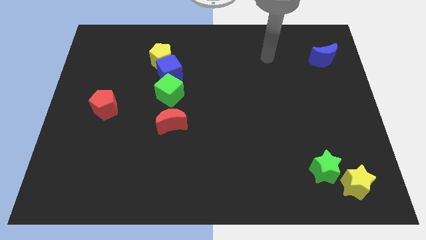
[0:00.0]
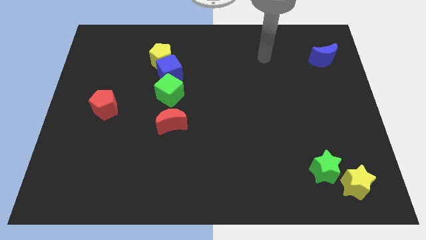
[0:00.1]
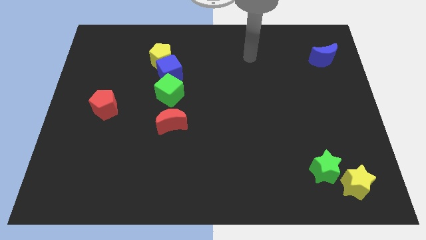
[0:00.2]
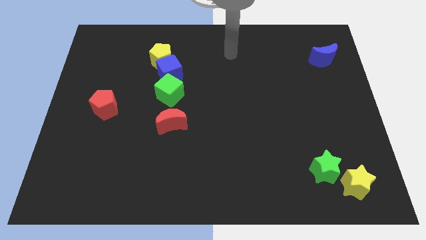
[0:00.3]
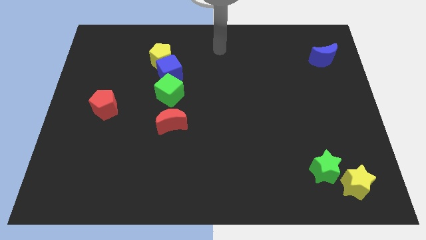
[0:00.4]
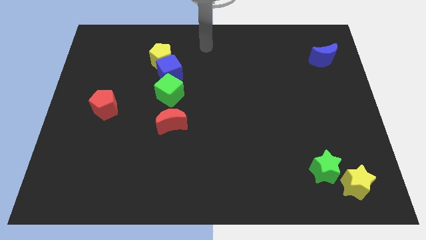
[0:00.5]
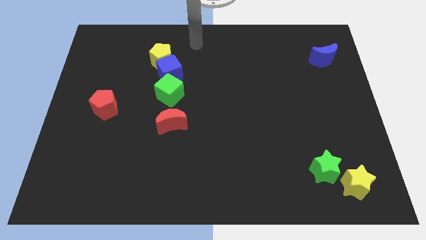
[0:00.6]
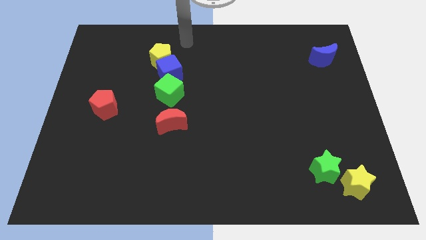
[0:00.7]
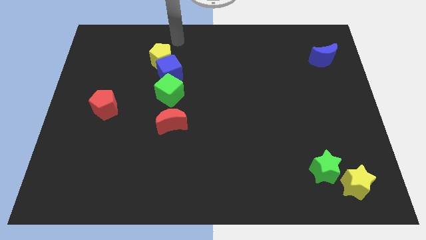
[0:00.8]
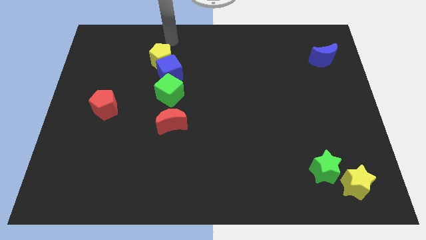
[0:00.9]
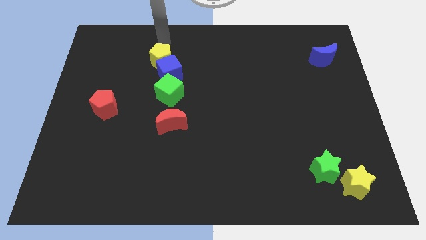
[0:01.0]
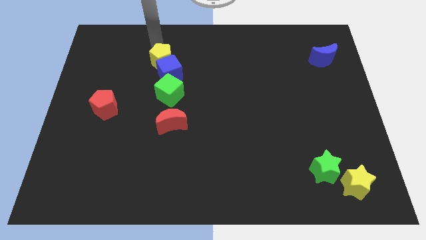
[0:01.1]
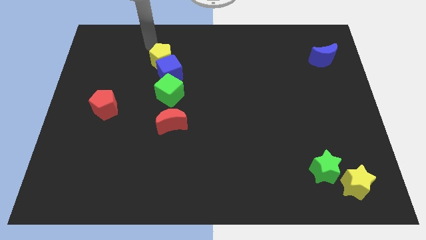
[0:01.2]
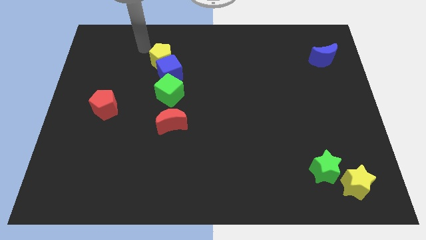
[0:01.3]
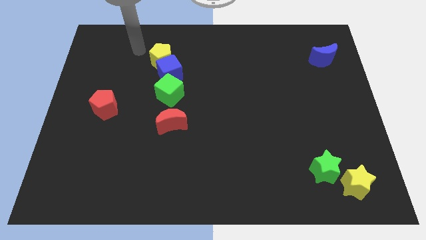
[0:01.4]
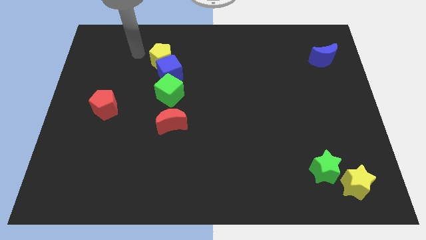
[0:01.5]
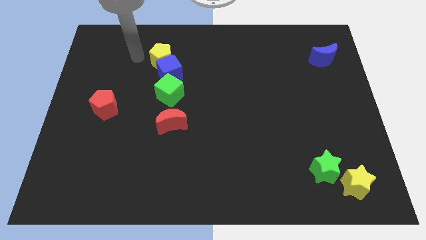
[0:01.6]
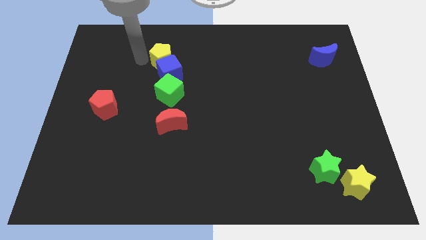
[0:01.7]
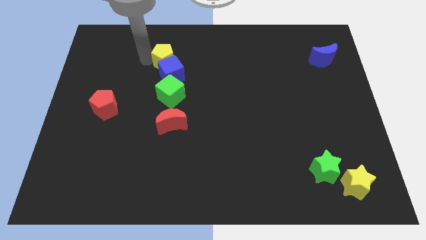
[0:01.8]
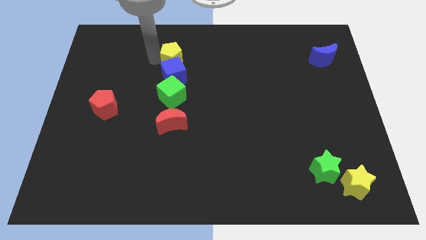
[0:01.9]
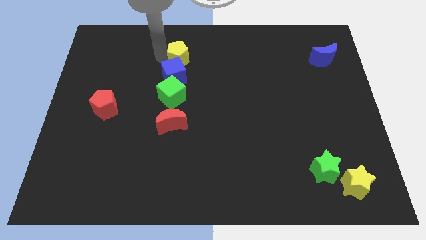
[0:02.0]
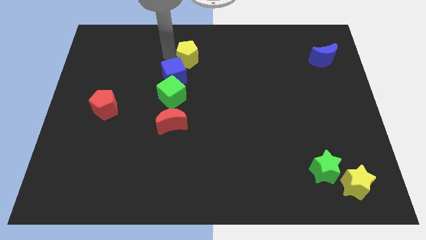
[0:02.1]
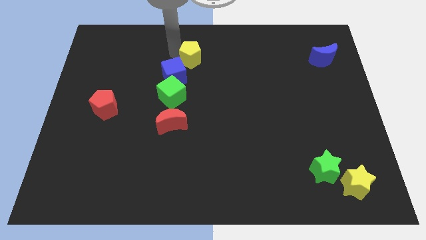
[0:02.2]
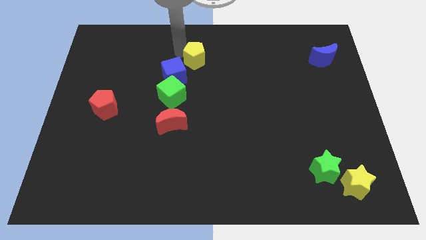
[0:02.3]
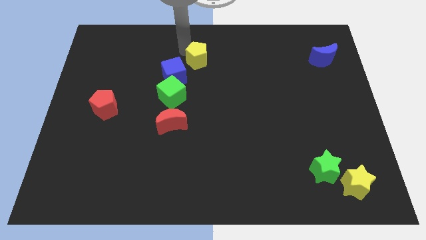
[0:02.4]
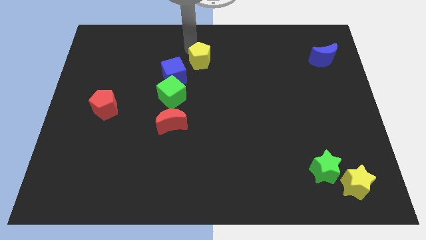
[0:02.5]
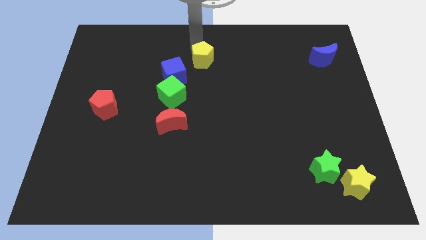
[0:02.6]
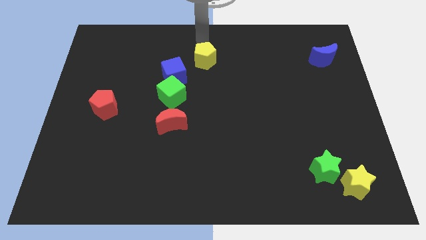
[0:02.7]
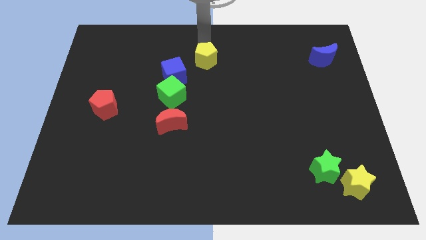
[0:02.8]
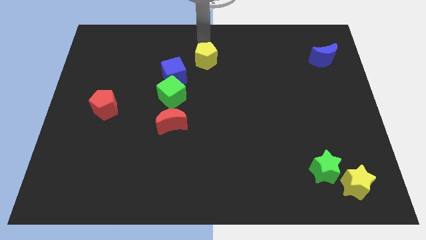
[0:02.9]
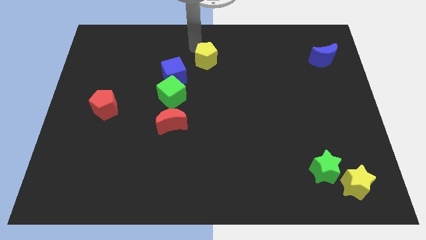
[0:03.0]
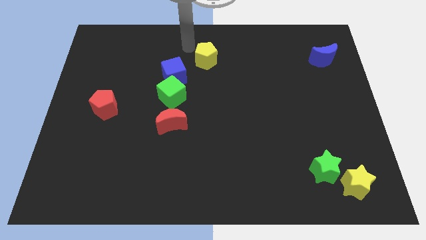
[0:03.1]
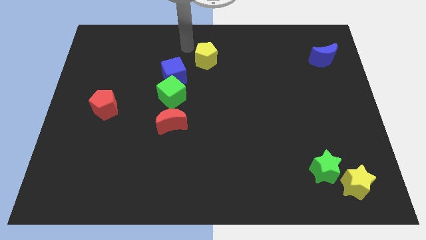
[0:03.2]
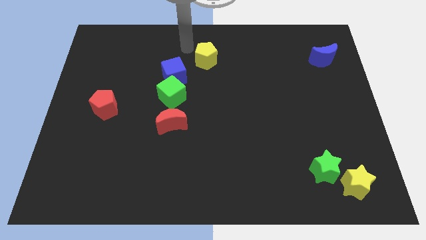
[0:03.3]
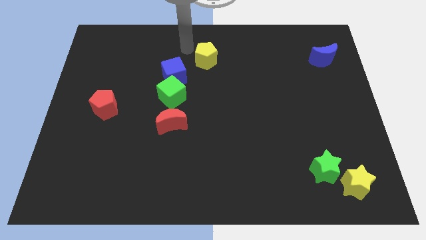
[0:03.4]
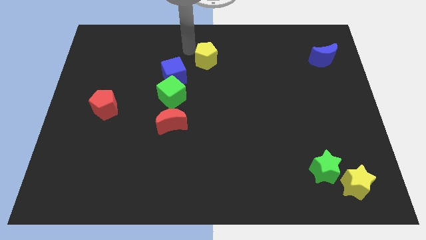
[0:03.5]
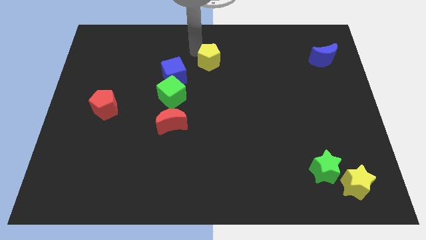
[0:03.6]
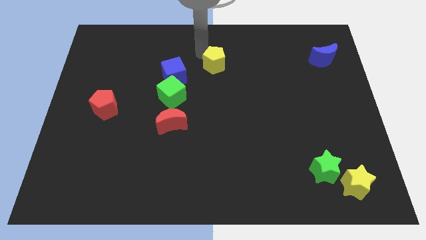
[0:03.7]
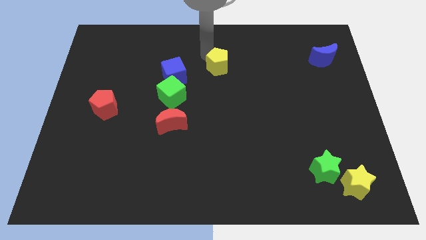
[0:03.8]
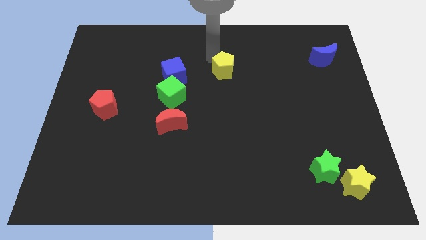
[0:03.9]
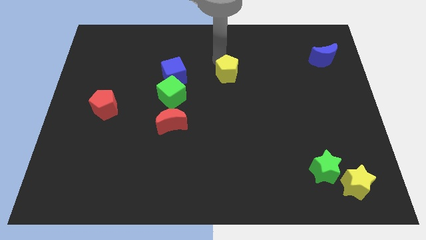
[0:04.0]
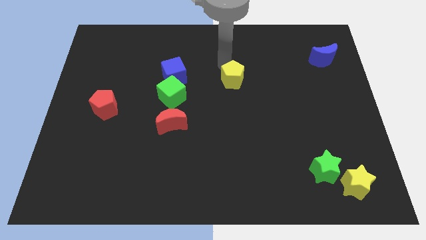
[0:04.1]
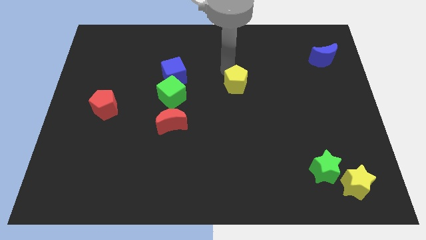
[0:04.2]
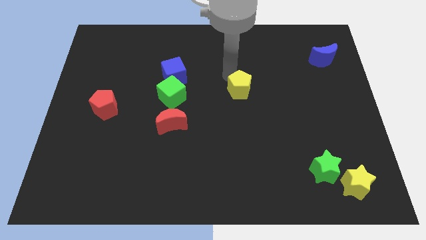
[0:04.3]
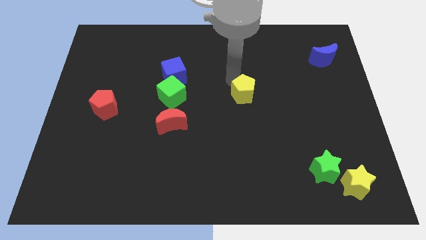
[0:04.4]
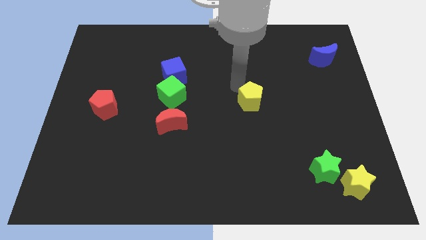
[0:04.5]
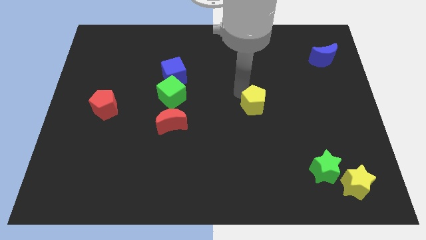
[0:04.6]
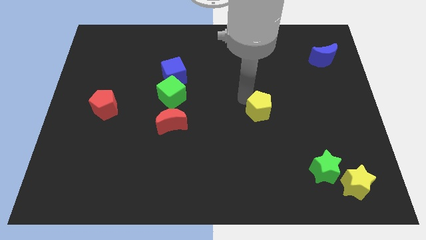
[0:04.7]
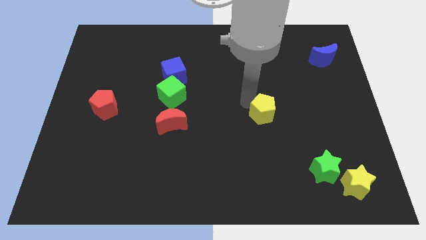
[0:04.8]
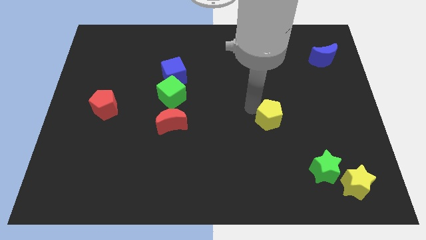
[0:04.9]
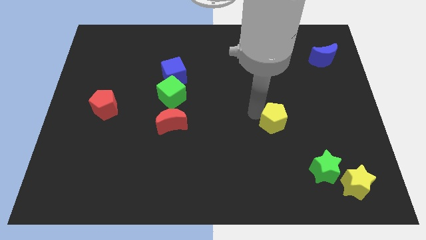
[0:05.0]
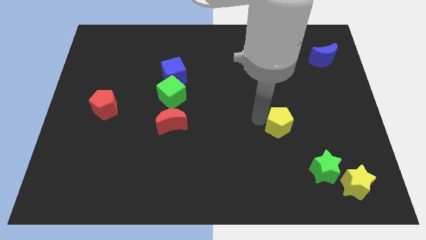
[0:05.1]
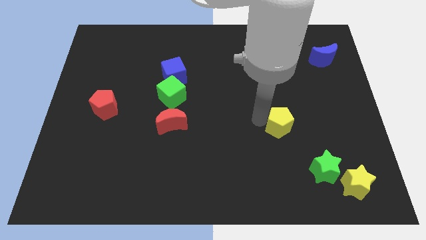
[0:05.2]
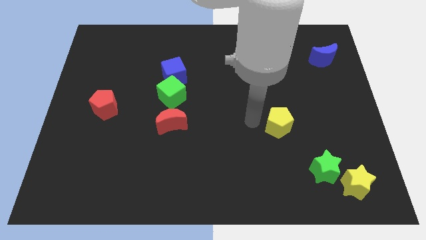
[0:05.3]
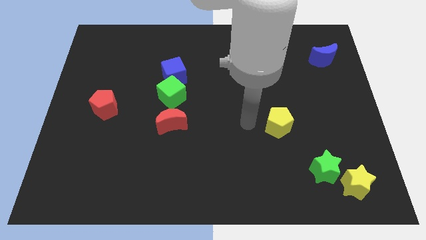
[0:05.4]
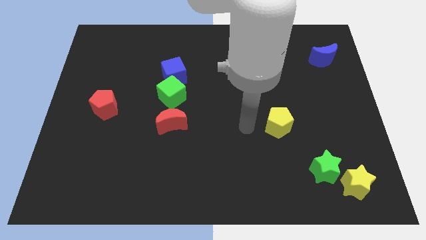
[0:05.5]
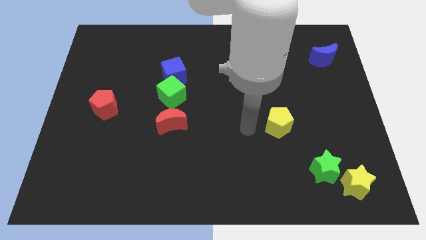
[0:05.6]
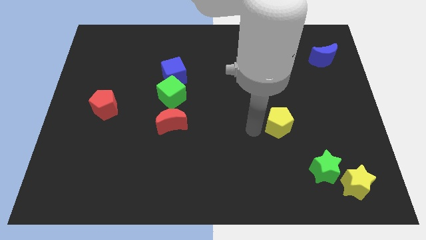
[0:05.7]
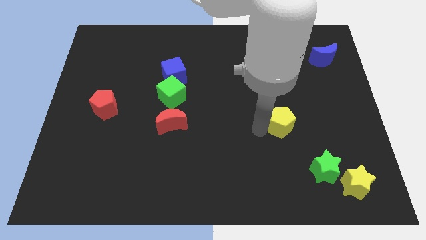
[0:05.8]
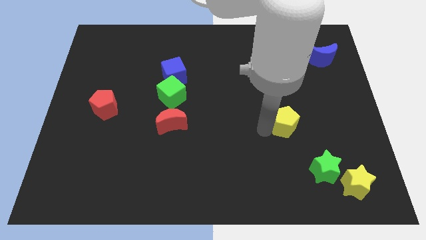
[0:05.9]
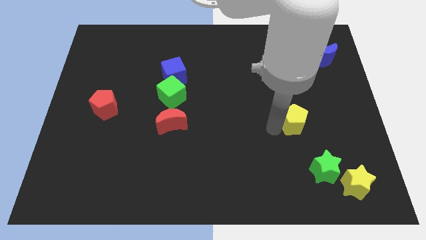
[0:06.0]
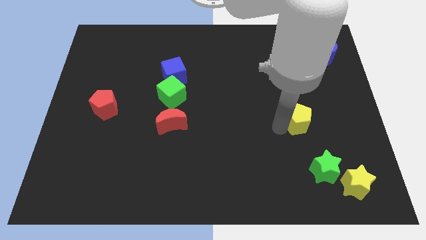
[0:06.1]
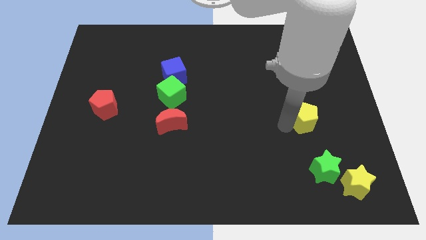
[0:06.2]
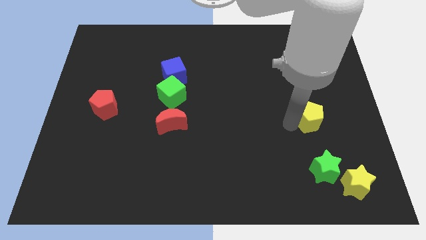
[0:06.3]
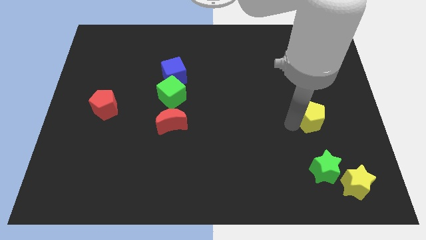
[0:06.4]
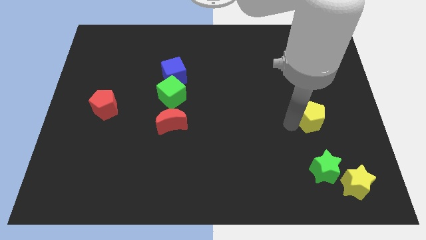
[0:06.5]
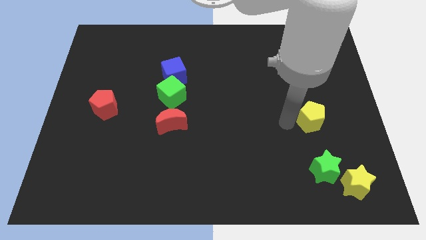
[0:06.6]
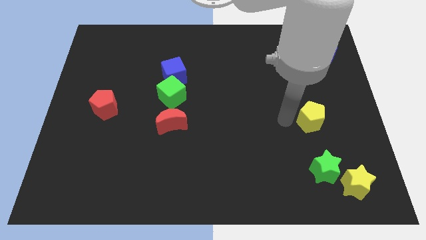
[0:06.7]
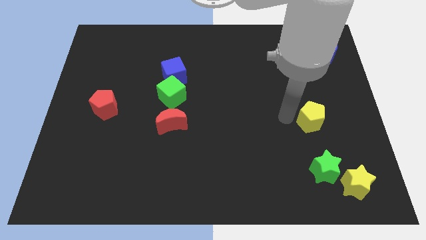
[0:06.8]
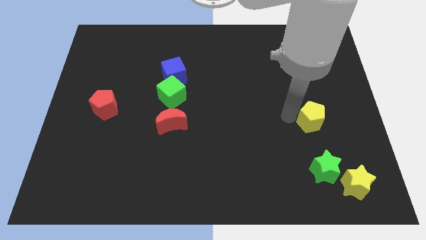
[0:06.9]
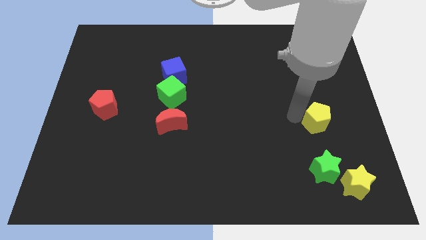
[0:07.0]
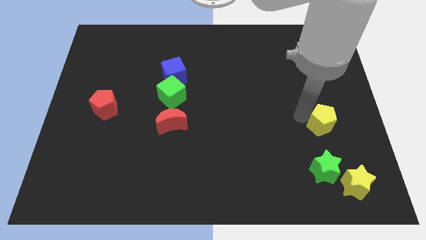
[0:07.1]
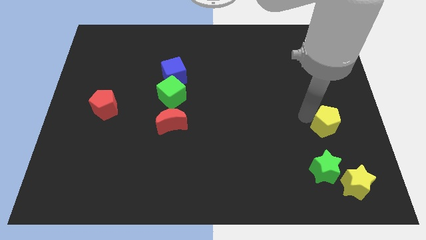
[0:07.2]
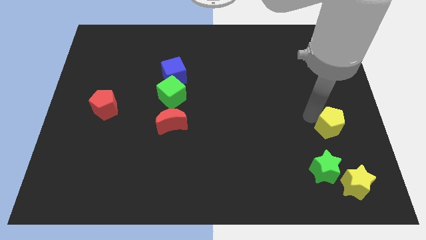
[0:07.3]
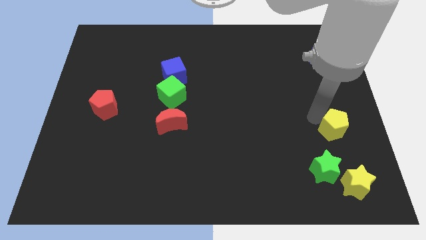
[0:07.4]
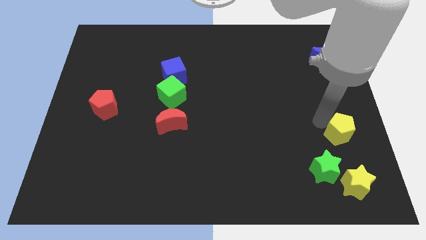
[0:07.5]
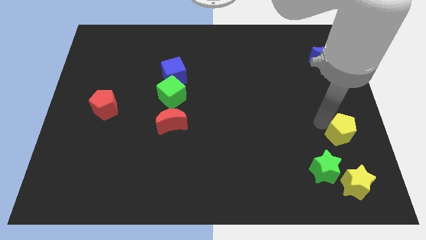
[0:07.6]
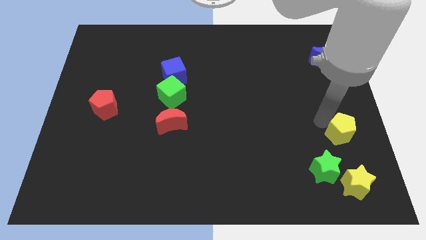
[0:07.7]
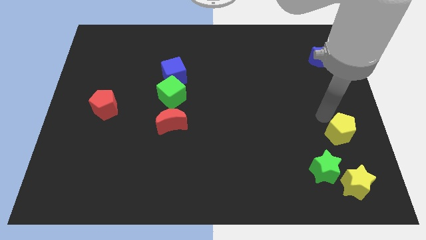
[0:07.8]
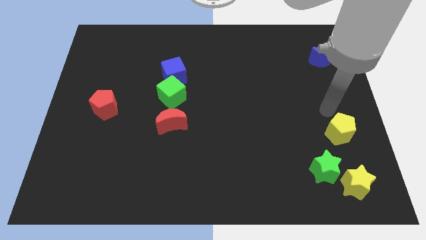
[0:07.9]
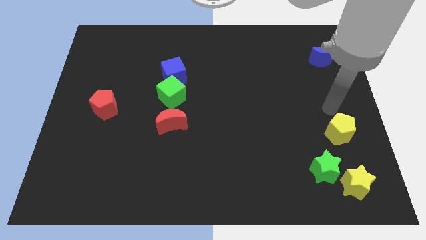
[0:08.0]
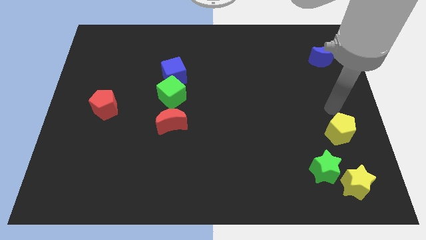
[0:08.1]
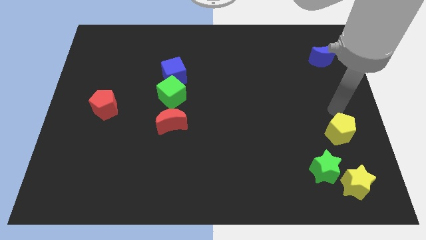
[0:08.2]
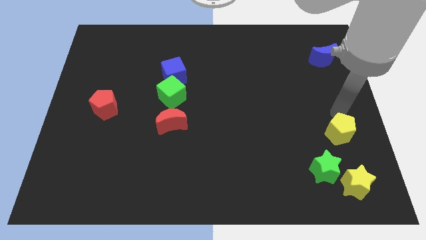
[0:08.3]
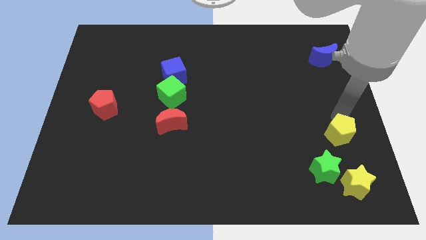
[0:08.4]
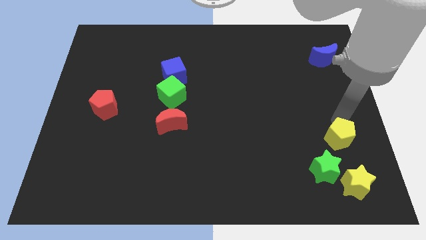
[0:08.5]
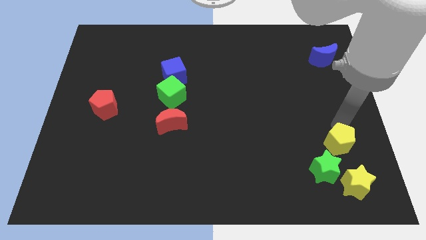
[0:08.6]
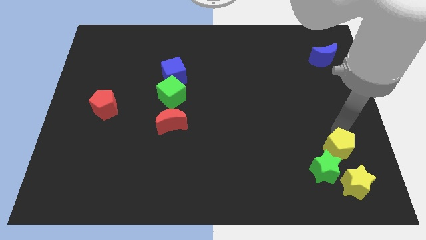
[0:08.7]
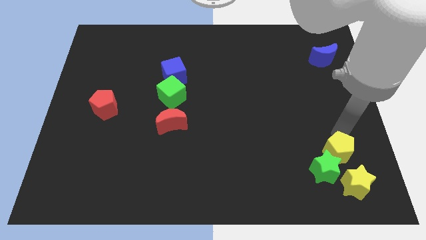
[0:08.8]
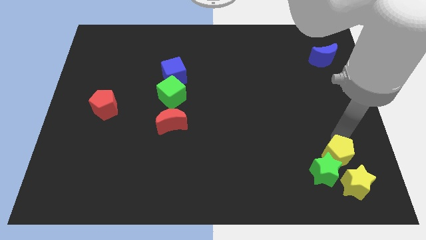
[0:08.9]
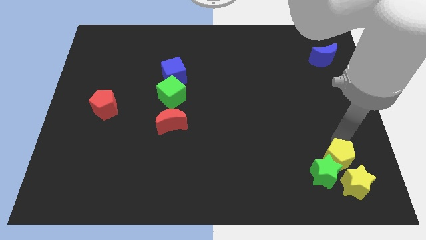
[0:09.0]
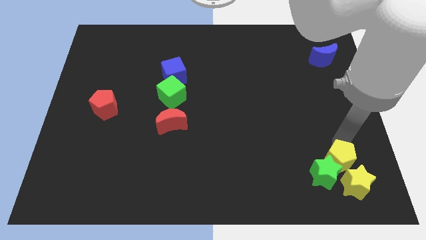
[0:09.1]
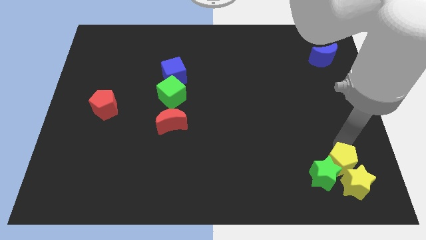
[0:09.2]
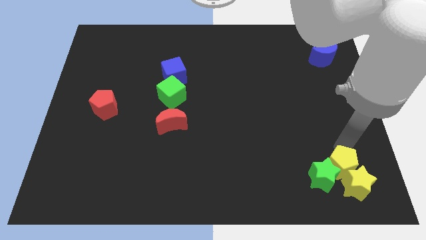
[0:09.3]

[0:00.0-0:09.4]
put the yellow pentagon next to the yellow star
